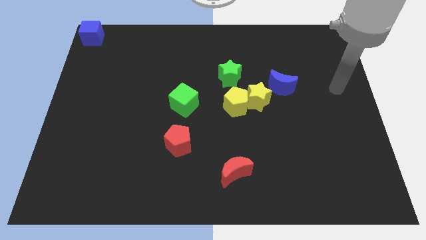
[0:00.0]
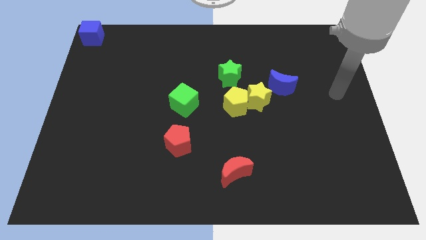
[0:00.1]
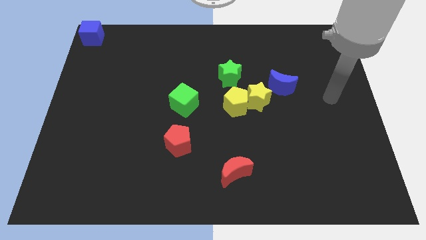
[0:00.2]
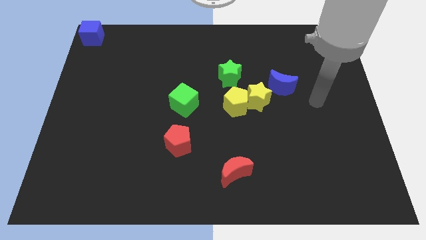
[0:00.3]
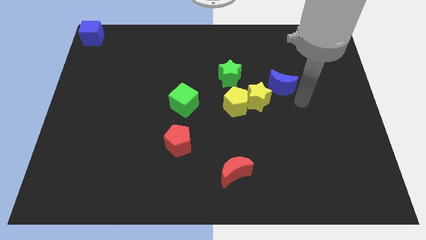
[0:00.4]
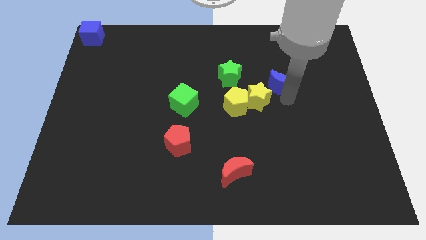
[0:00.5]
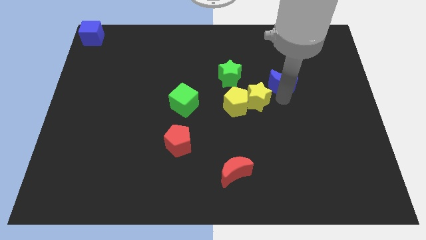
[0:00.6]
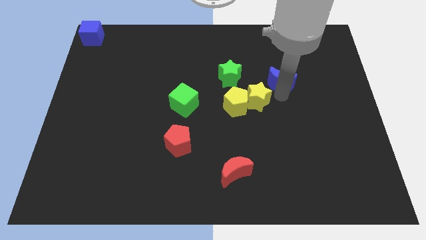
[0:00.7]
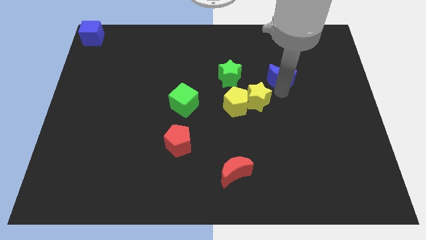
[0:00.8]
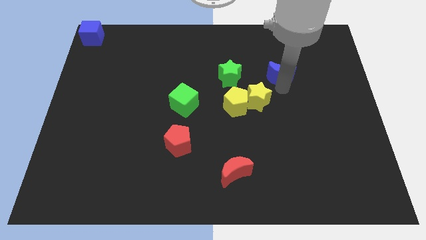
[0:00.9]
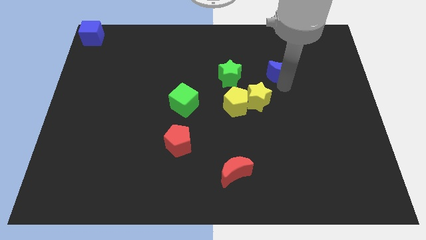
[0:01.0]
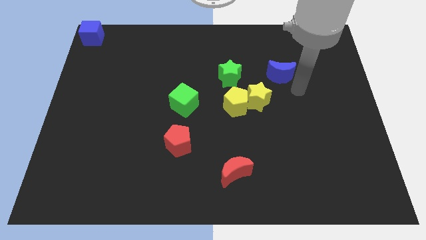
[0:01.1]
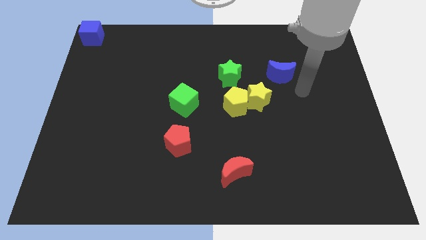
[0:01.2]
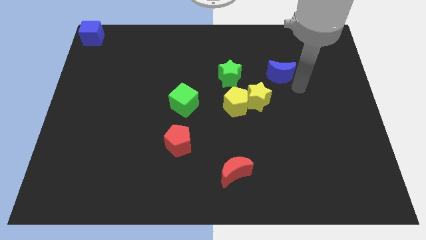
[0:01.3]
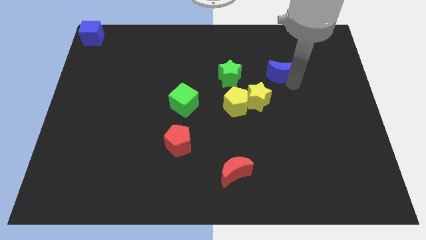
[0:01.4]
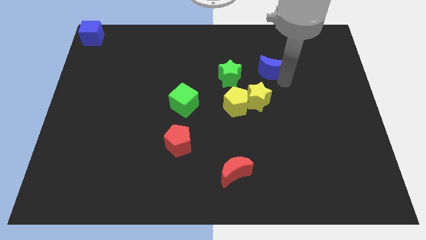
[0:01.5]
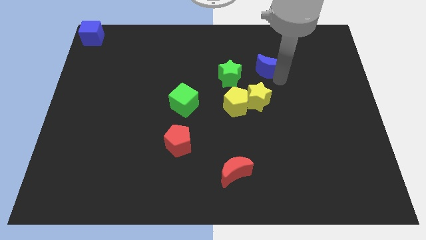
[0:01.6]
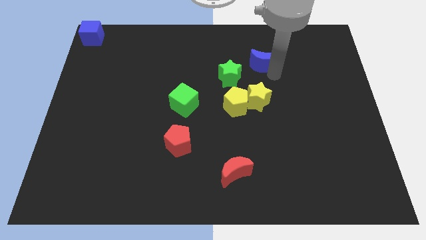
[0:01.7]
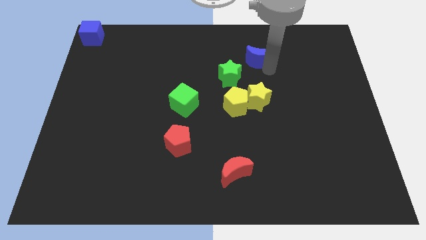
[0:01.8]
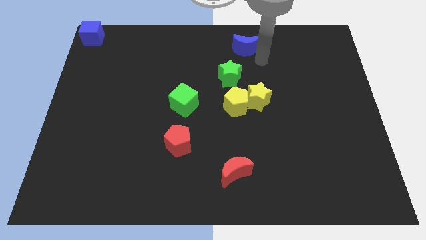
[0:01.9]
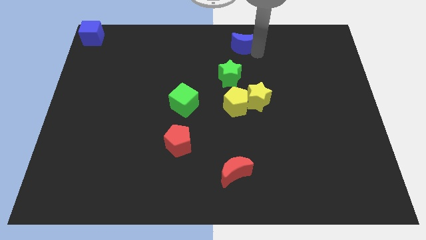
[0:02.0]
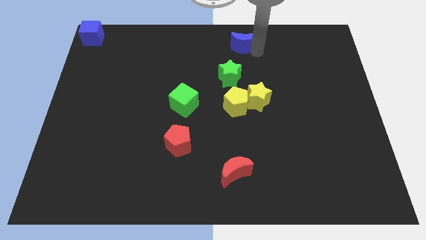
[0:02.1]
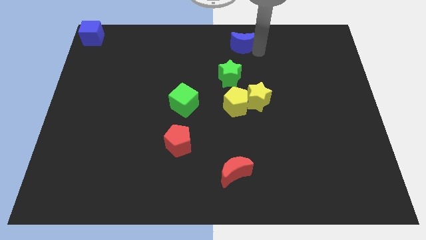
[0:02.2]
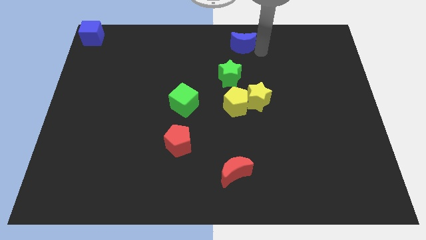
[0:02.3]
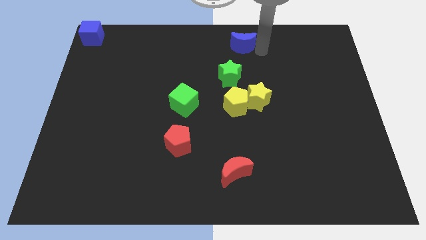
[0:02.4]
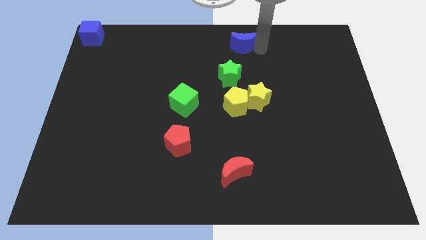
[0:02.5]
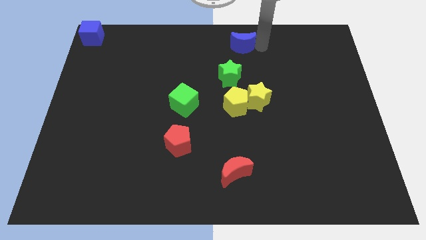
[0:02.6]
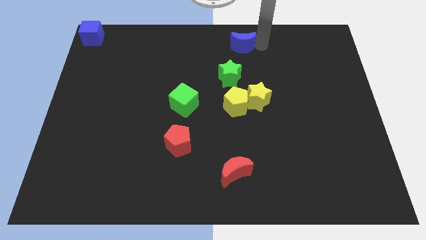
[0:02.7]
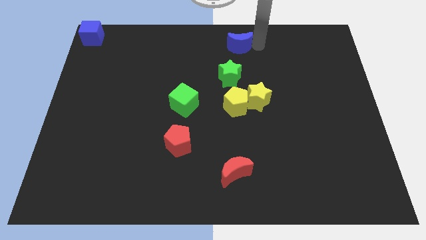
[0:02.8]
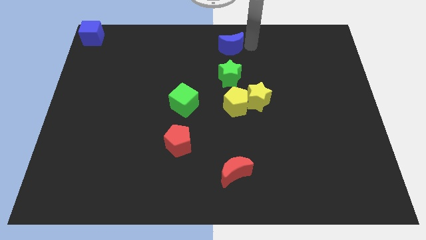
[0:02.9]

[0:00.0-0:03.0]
place the blue moon above the green star

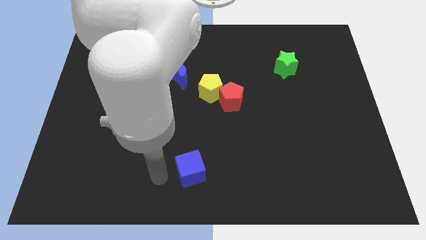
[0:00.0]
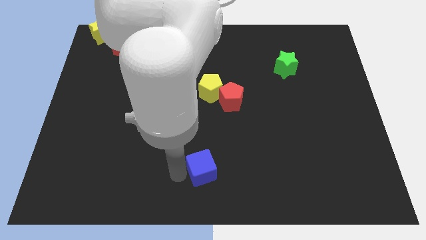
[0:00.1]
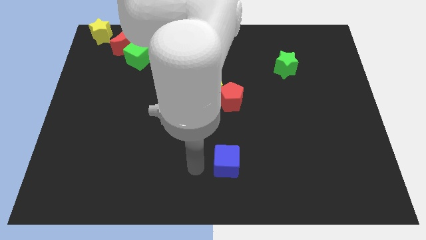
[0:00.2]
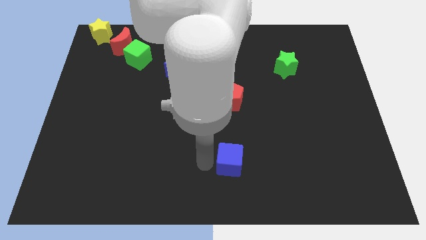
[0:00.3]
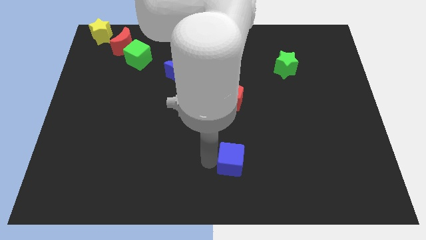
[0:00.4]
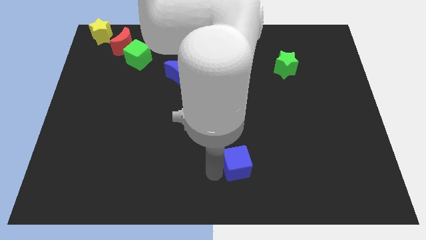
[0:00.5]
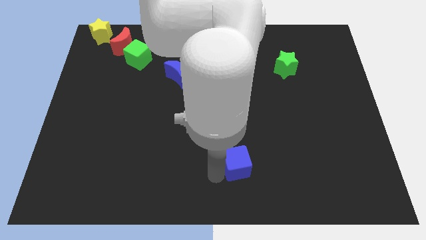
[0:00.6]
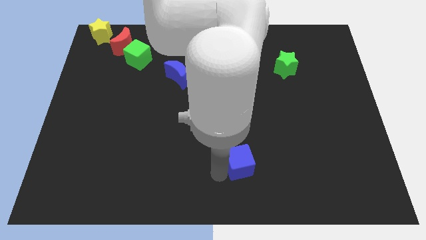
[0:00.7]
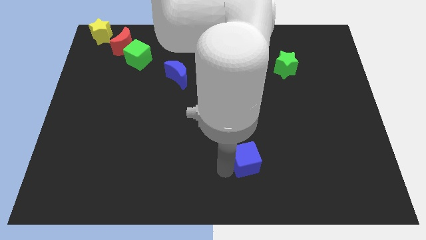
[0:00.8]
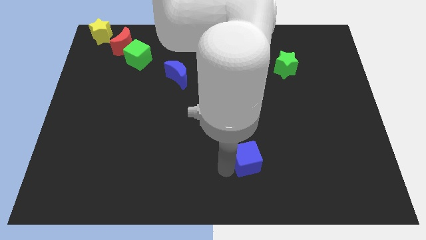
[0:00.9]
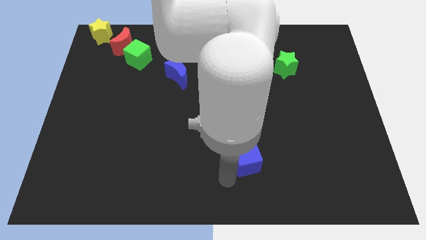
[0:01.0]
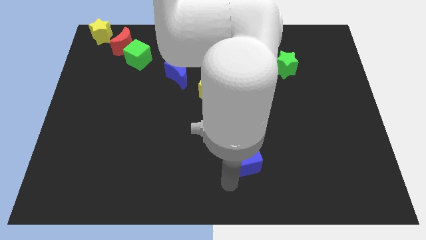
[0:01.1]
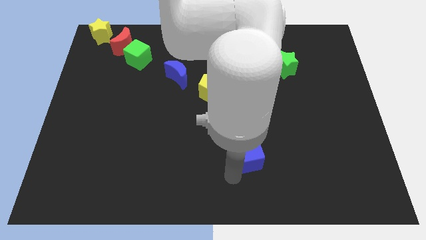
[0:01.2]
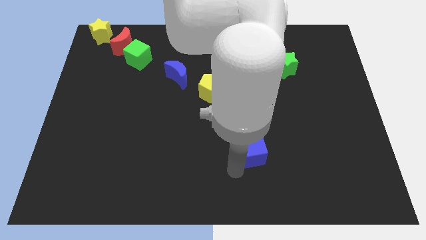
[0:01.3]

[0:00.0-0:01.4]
place the blue cube below the red pentagon

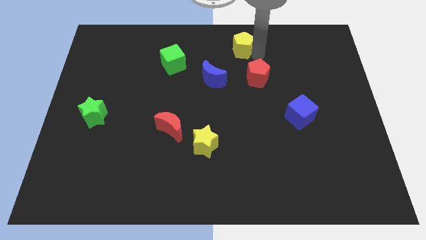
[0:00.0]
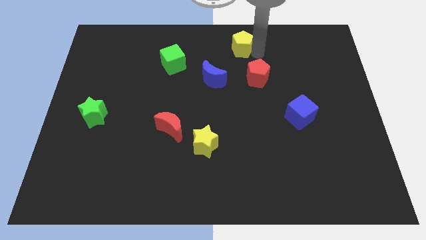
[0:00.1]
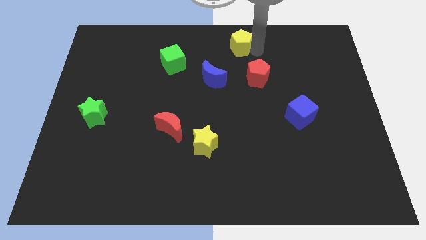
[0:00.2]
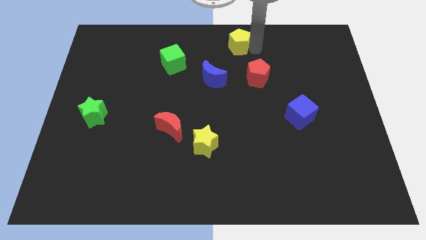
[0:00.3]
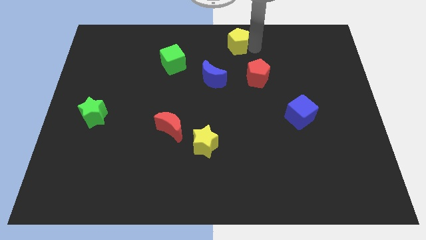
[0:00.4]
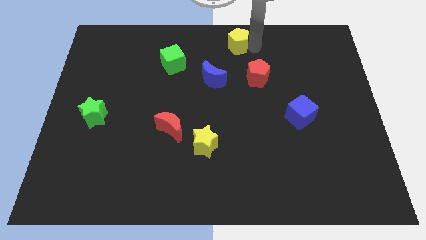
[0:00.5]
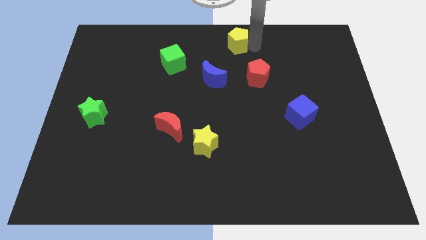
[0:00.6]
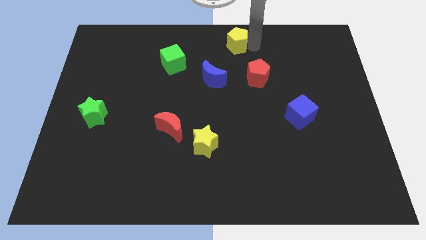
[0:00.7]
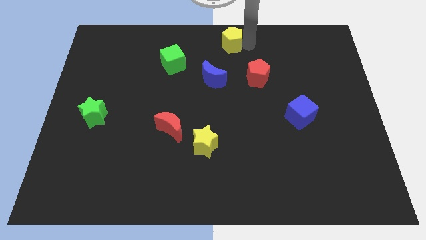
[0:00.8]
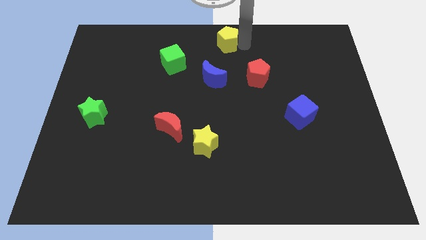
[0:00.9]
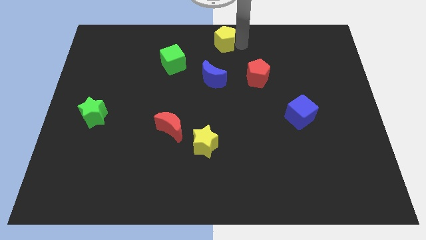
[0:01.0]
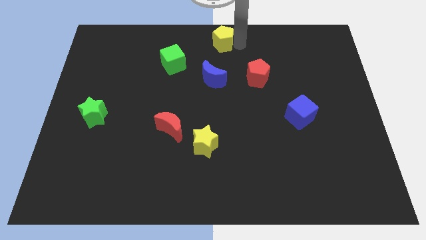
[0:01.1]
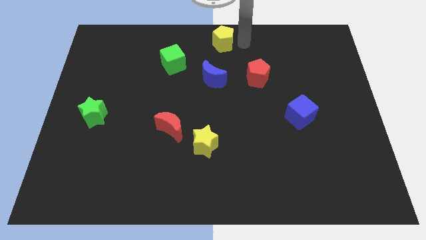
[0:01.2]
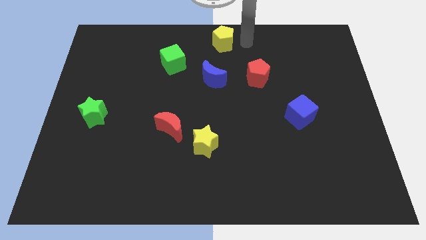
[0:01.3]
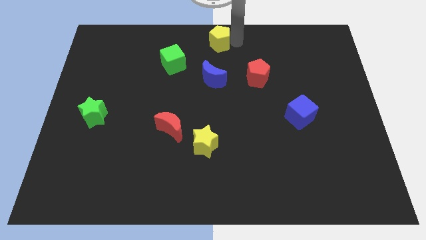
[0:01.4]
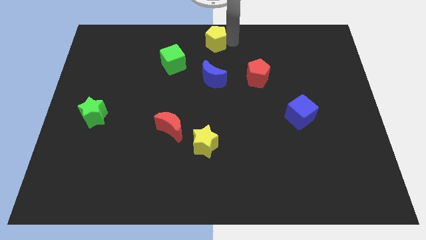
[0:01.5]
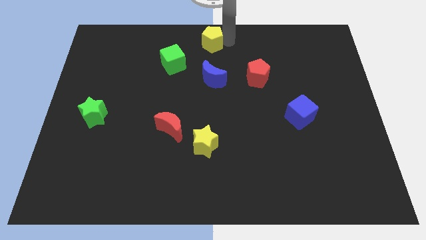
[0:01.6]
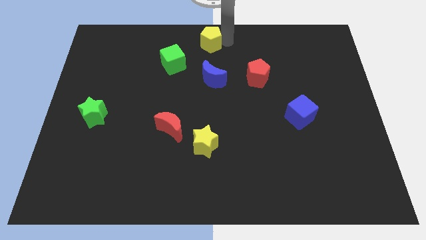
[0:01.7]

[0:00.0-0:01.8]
place the yellow pentagon at the top center of the board

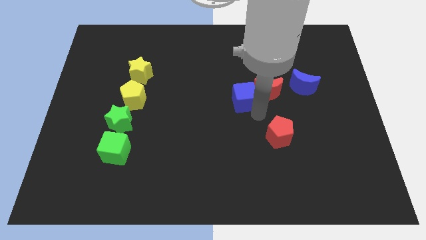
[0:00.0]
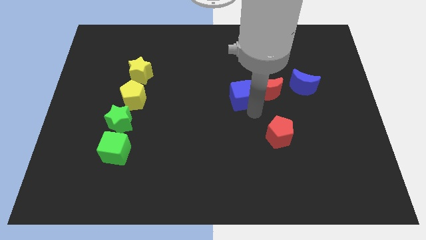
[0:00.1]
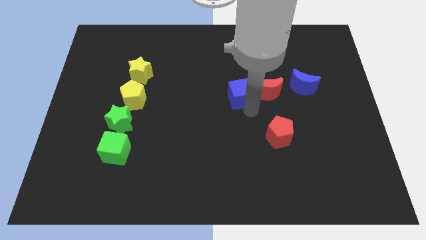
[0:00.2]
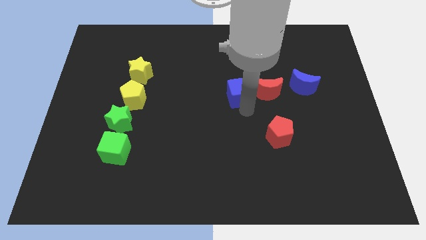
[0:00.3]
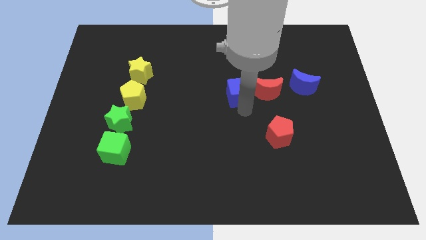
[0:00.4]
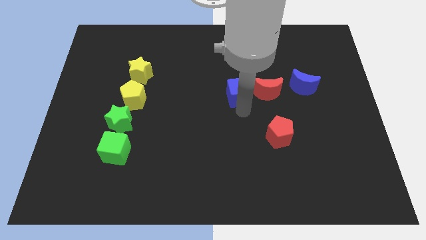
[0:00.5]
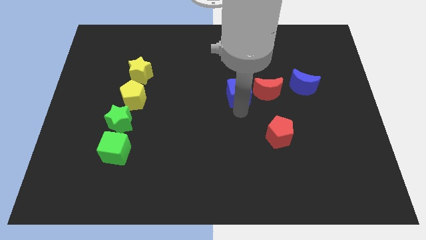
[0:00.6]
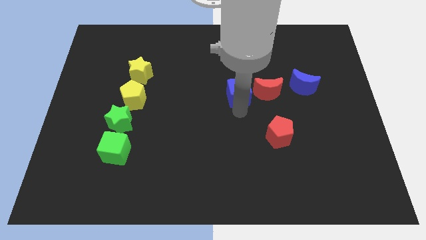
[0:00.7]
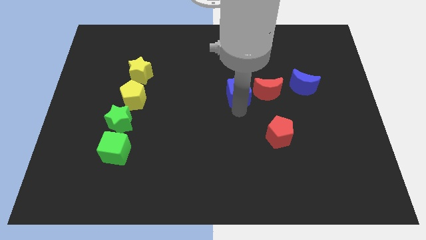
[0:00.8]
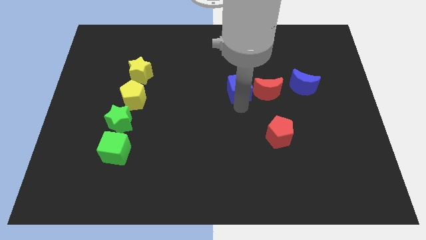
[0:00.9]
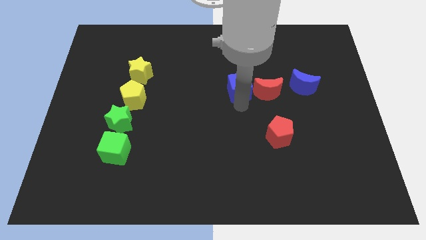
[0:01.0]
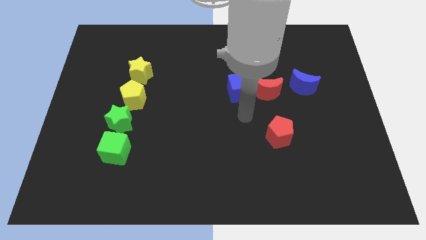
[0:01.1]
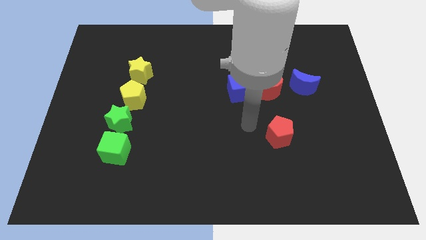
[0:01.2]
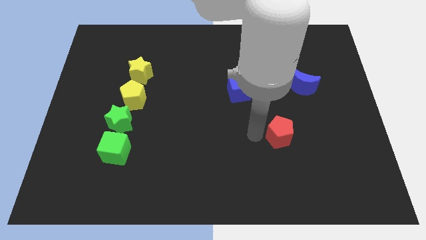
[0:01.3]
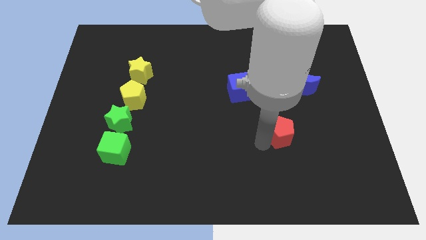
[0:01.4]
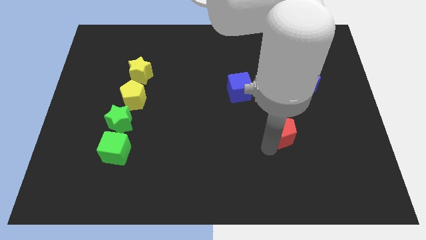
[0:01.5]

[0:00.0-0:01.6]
move the blue cube to the left of red moon

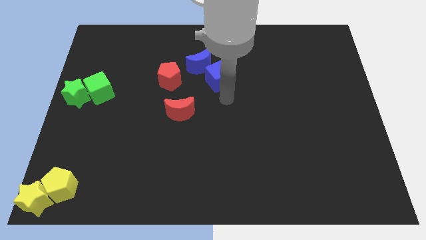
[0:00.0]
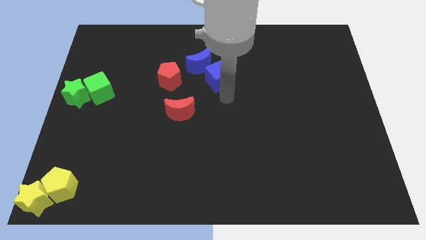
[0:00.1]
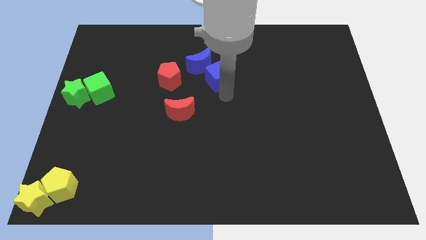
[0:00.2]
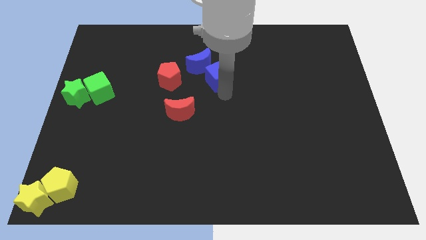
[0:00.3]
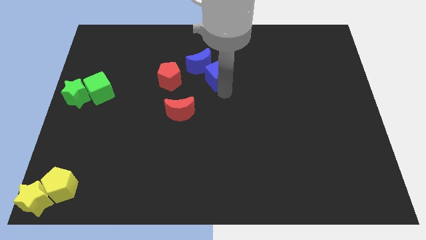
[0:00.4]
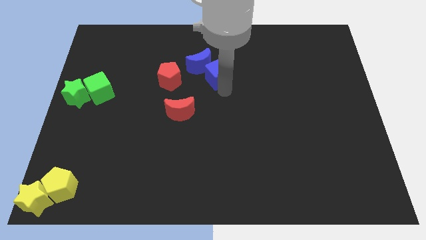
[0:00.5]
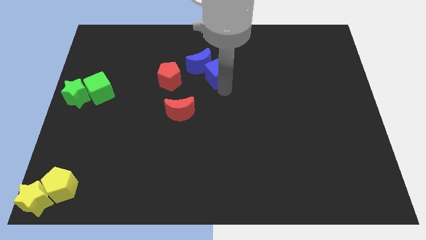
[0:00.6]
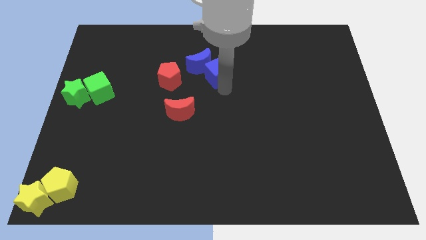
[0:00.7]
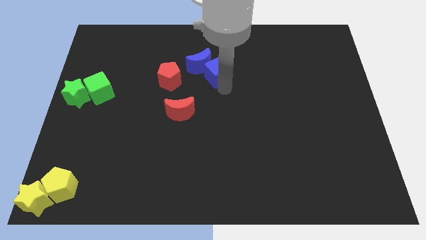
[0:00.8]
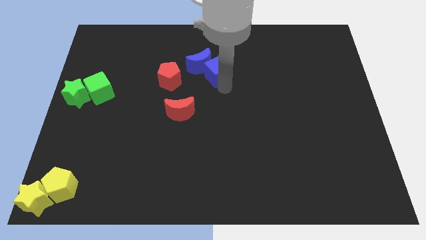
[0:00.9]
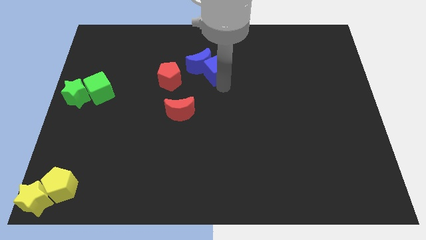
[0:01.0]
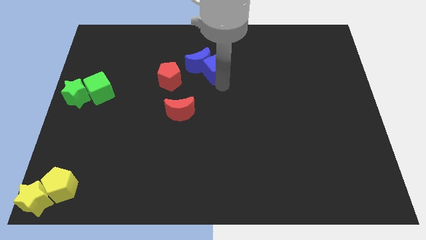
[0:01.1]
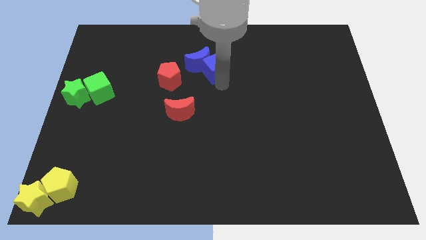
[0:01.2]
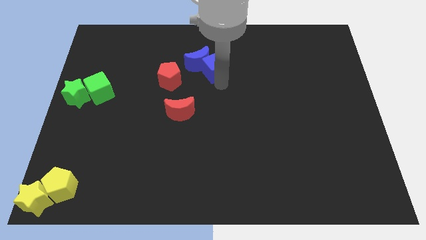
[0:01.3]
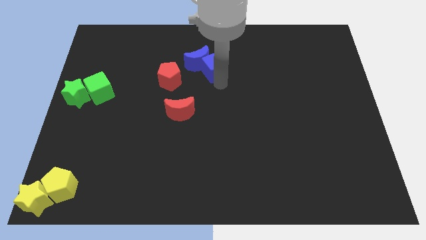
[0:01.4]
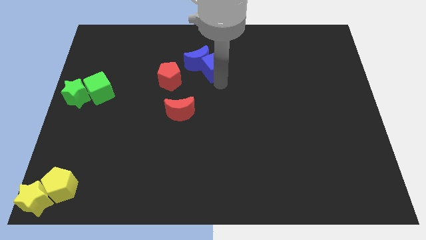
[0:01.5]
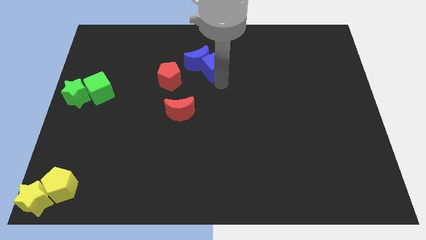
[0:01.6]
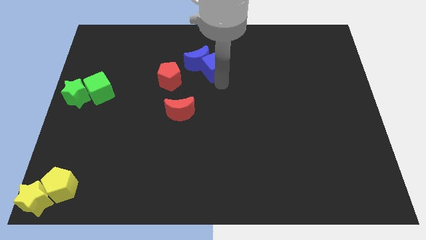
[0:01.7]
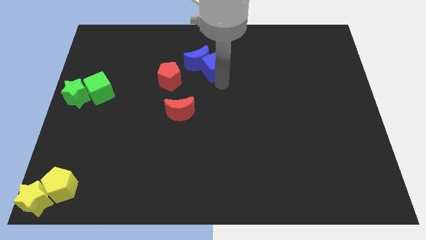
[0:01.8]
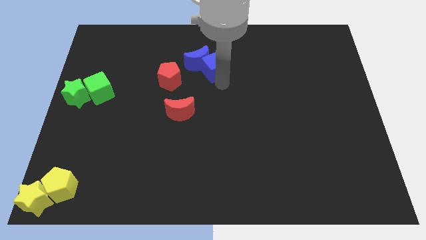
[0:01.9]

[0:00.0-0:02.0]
slightly push the blue blocks towards the top side of the board
